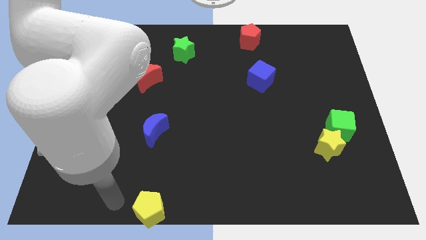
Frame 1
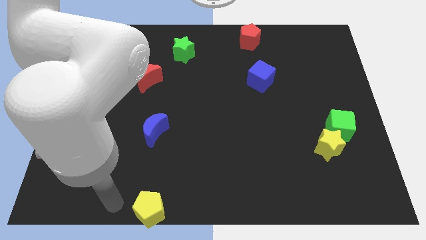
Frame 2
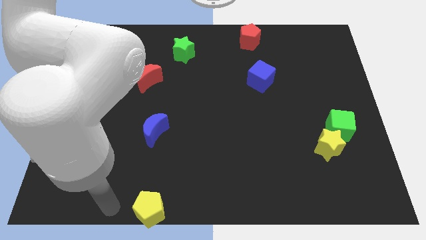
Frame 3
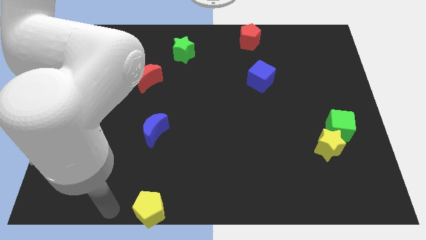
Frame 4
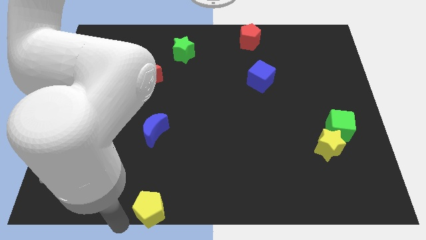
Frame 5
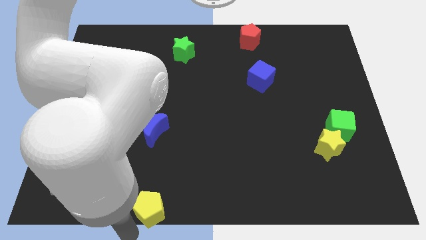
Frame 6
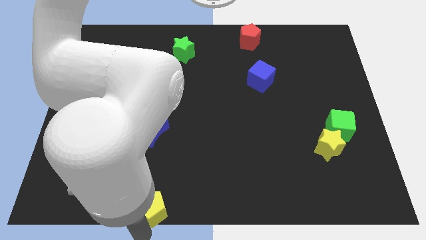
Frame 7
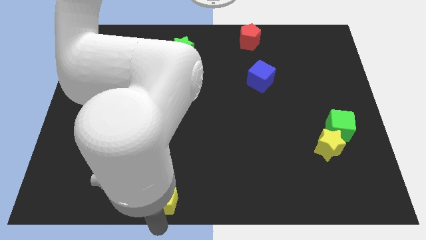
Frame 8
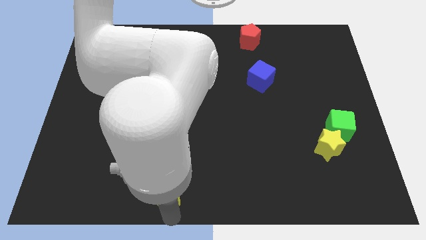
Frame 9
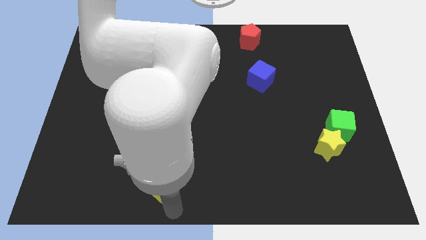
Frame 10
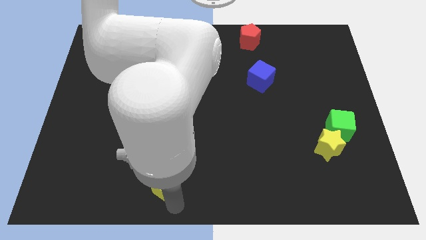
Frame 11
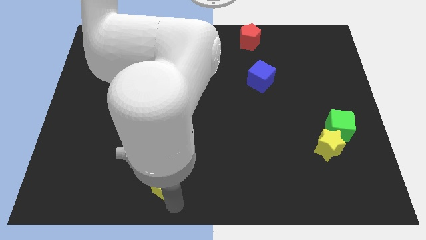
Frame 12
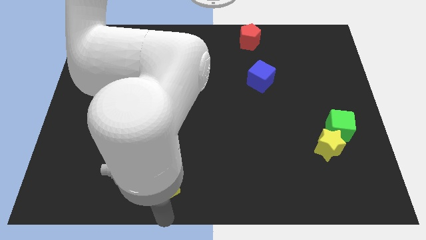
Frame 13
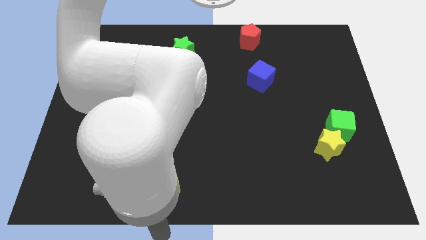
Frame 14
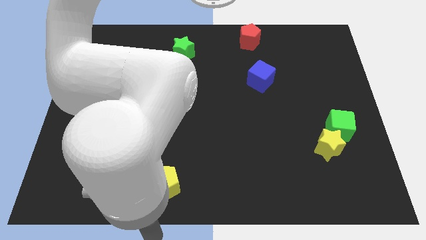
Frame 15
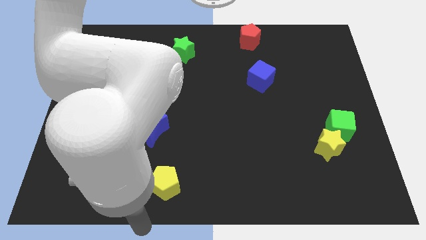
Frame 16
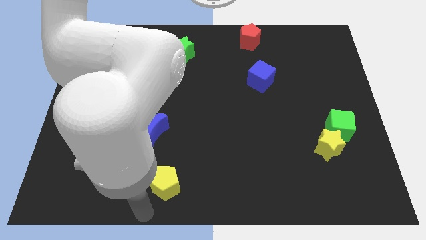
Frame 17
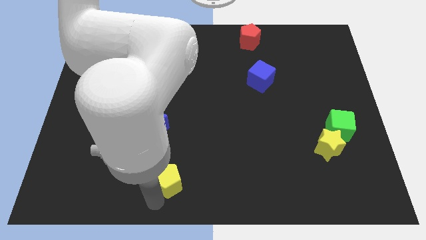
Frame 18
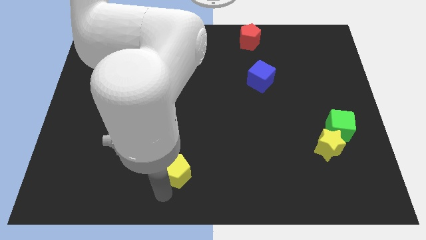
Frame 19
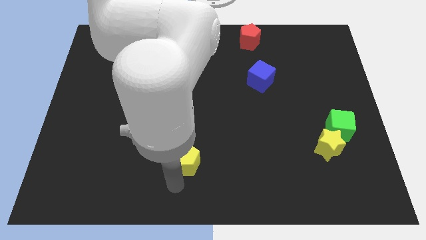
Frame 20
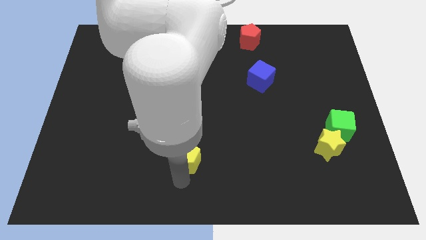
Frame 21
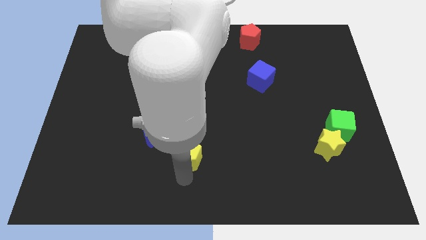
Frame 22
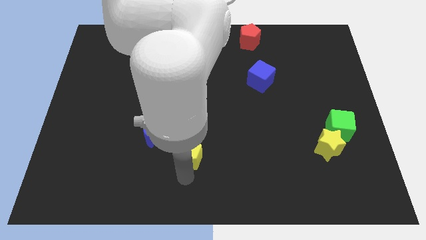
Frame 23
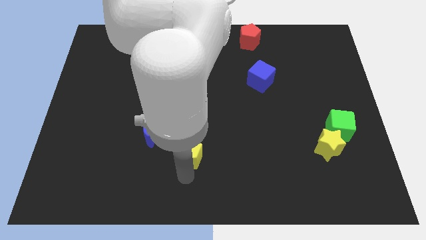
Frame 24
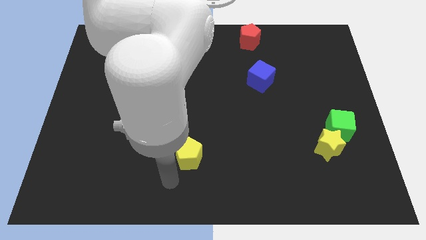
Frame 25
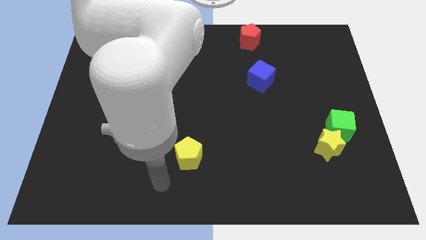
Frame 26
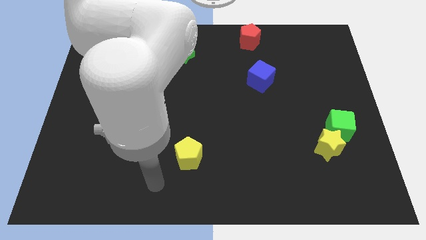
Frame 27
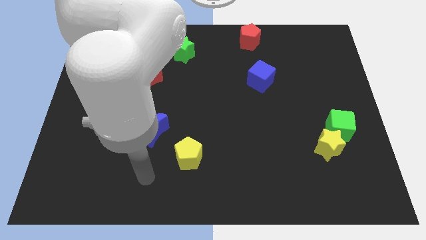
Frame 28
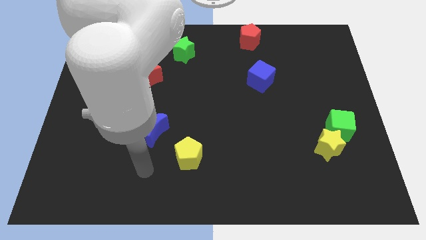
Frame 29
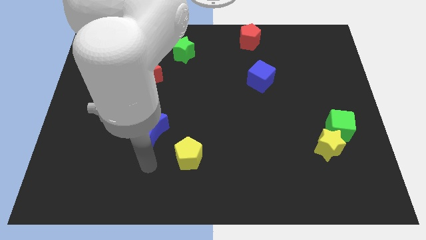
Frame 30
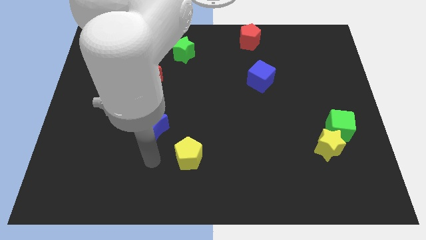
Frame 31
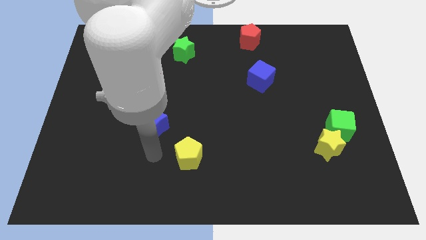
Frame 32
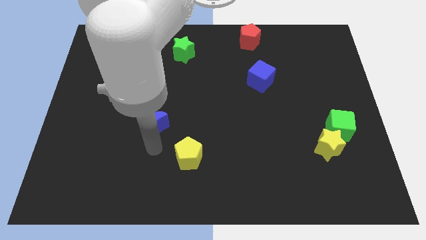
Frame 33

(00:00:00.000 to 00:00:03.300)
push the yellow pentagon diagonally bottom right to the blue moon

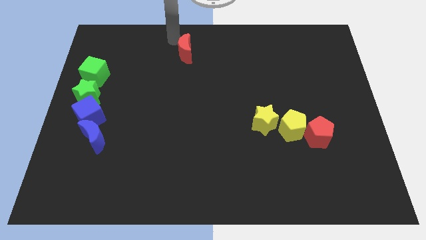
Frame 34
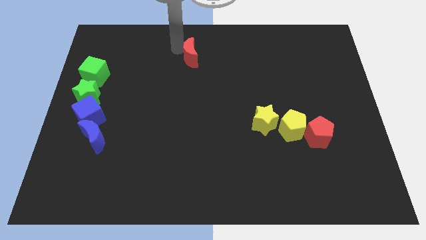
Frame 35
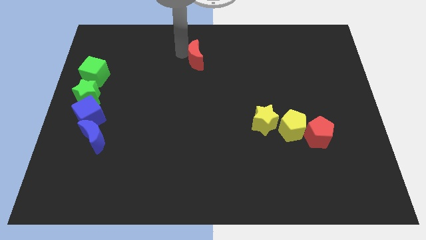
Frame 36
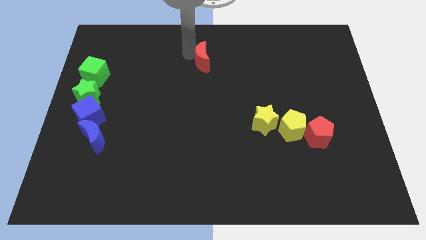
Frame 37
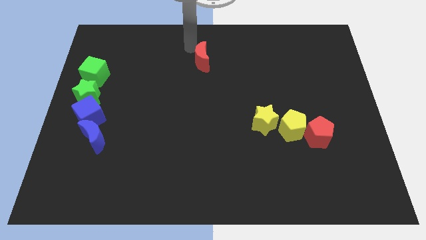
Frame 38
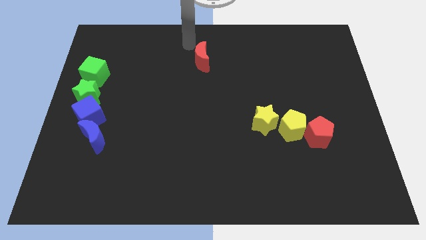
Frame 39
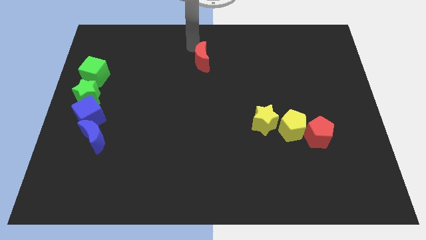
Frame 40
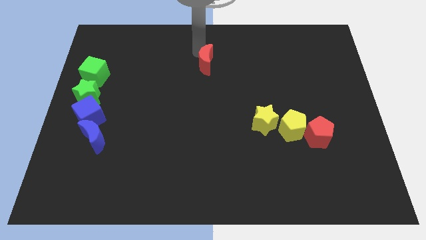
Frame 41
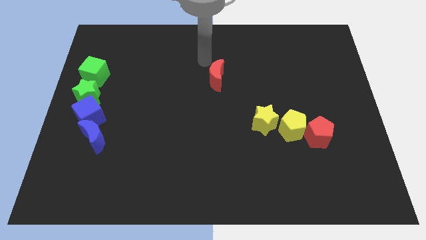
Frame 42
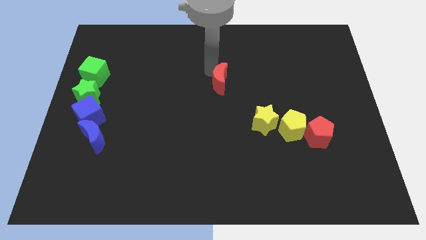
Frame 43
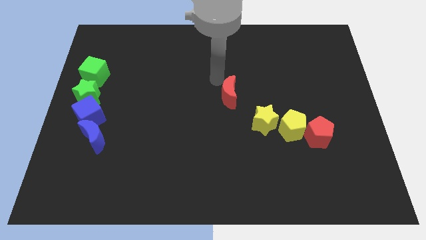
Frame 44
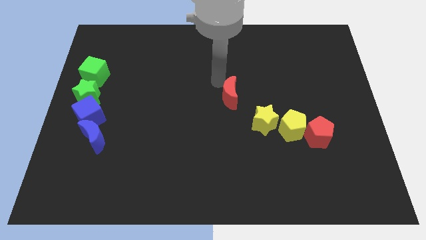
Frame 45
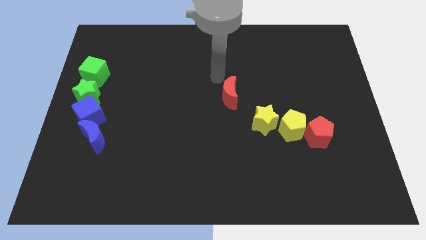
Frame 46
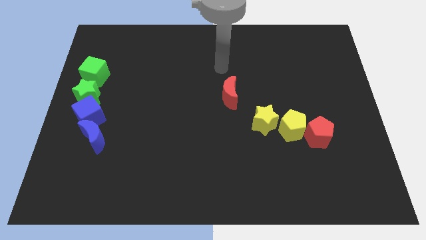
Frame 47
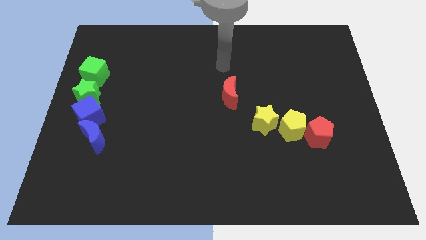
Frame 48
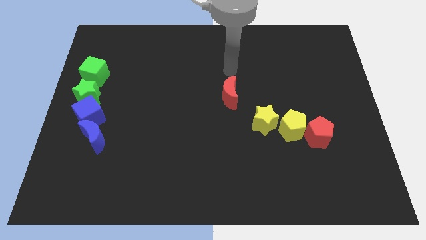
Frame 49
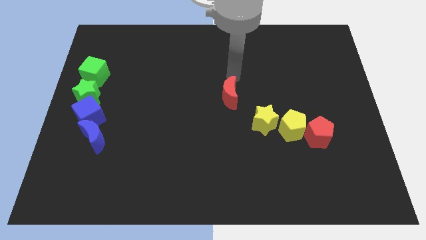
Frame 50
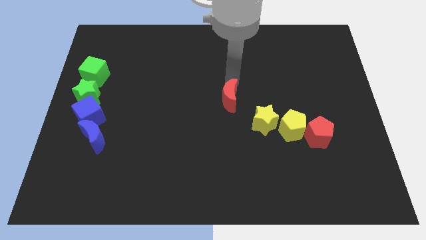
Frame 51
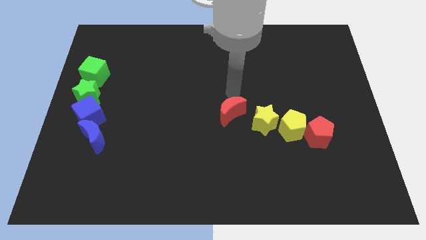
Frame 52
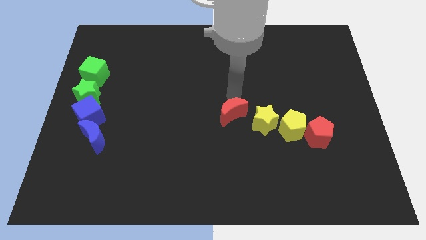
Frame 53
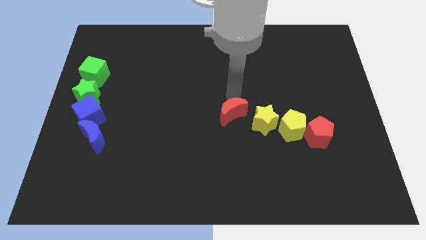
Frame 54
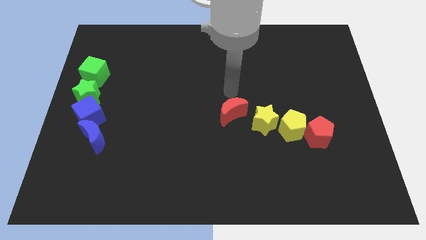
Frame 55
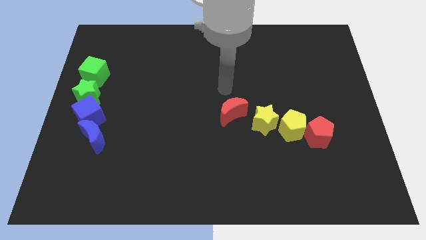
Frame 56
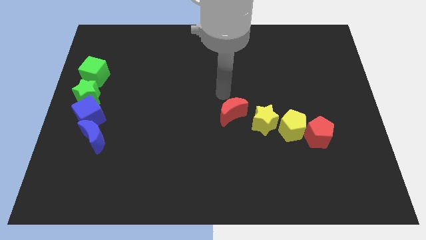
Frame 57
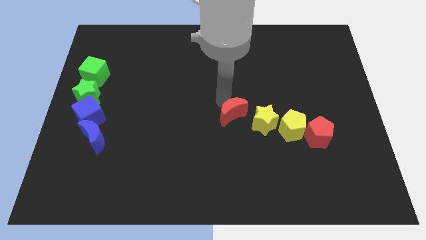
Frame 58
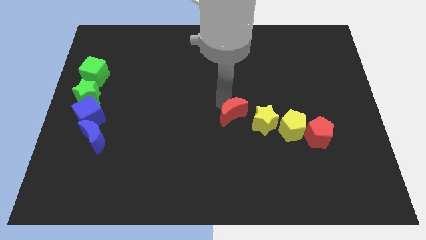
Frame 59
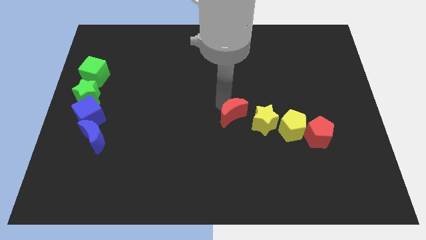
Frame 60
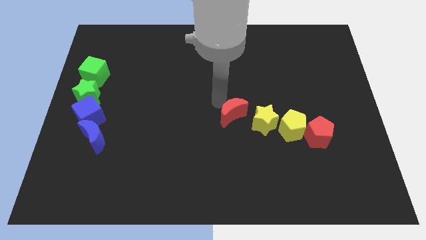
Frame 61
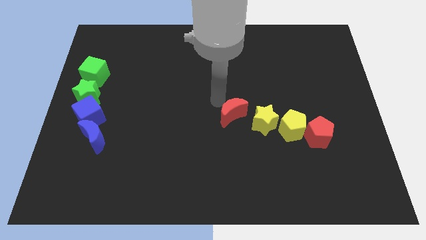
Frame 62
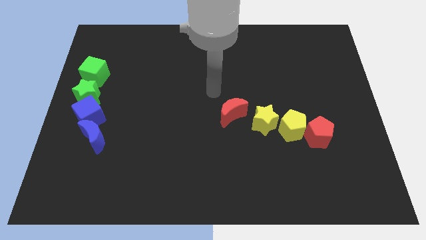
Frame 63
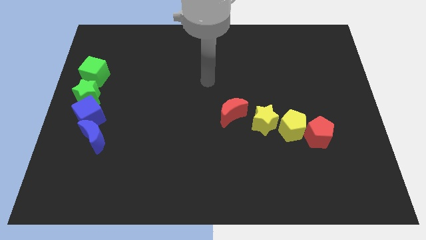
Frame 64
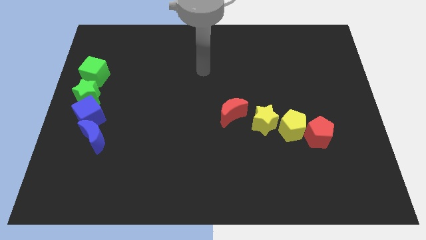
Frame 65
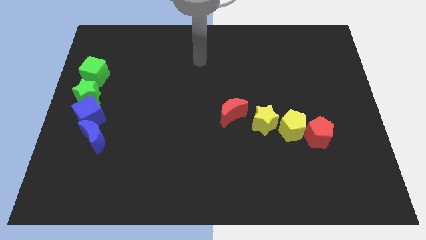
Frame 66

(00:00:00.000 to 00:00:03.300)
place the red moon to the left of the yellow star

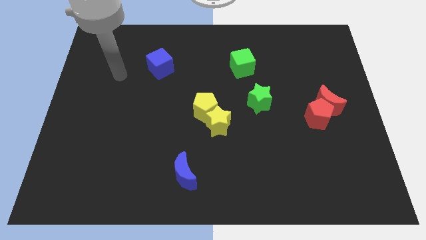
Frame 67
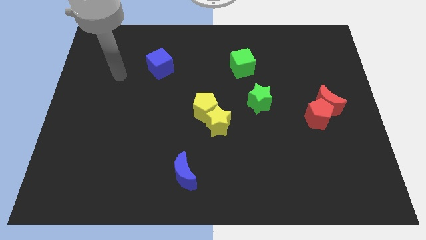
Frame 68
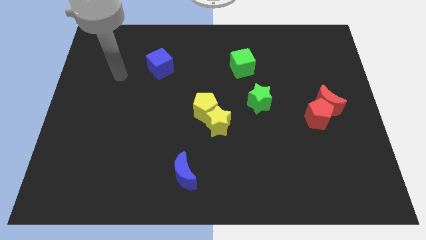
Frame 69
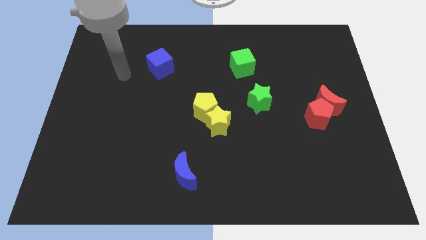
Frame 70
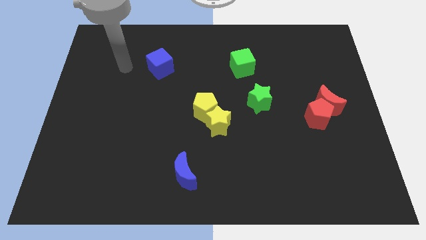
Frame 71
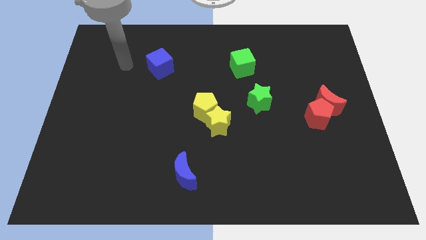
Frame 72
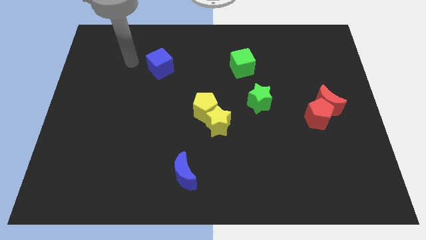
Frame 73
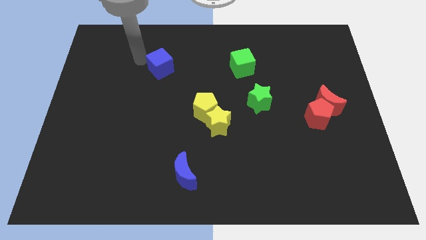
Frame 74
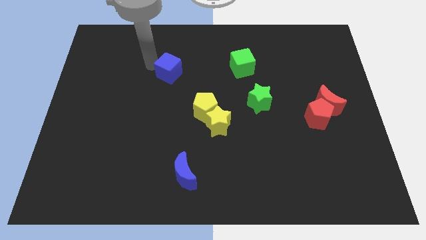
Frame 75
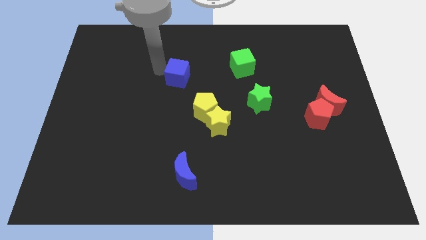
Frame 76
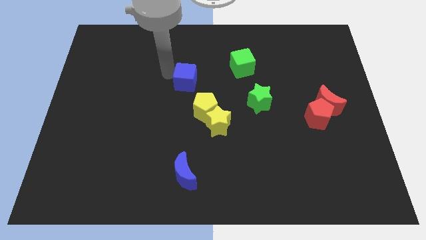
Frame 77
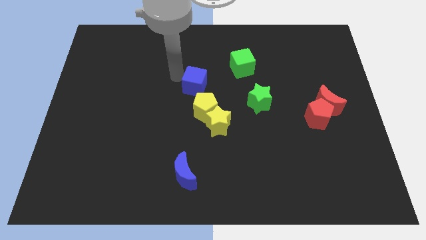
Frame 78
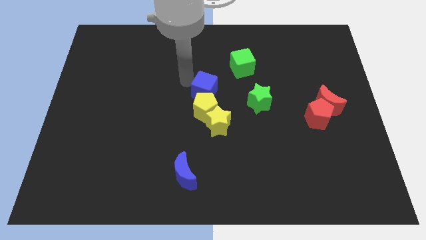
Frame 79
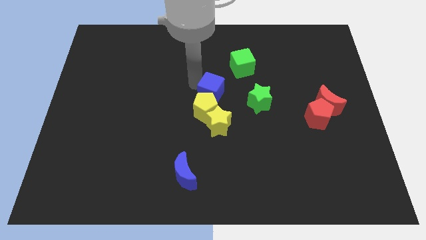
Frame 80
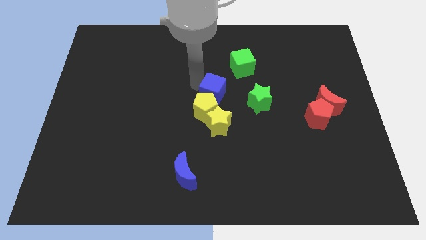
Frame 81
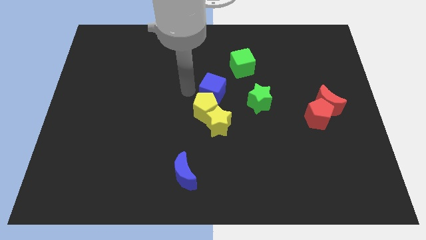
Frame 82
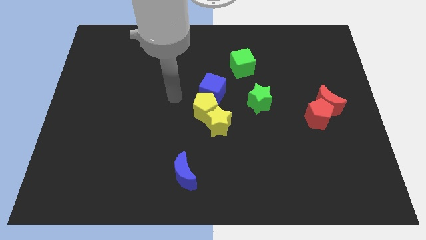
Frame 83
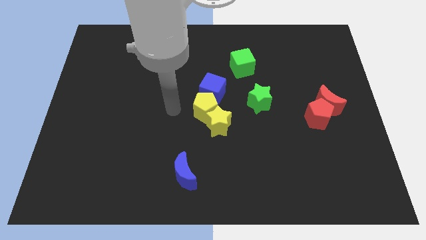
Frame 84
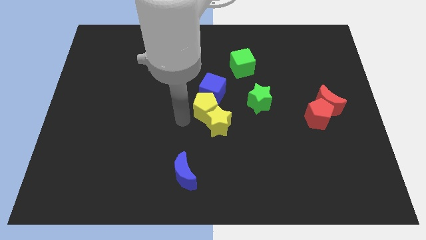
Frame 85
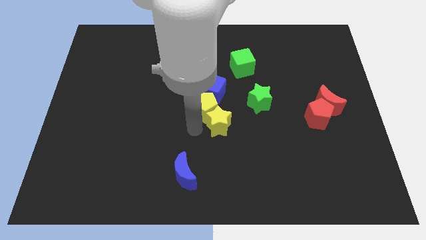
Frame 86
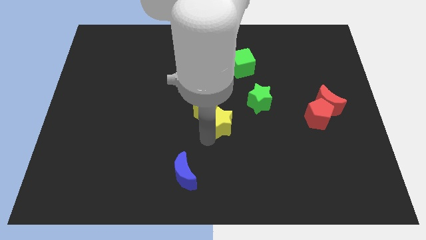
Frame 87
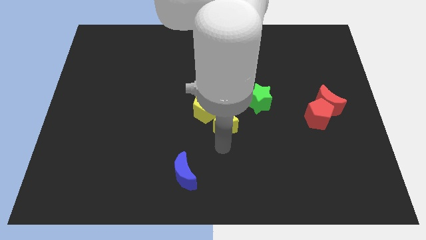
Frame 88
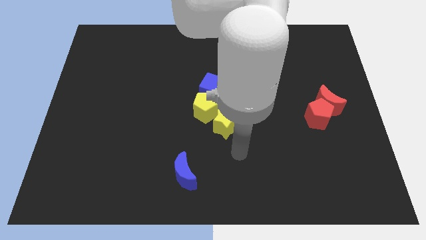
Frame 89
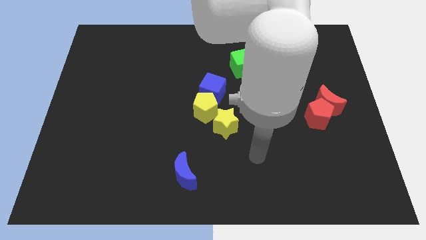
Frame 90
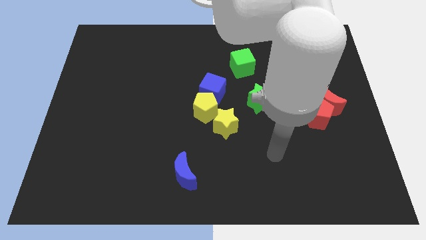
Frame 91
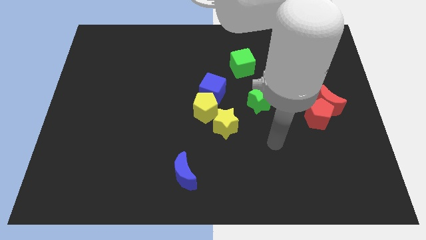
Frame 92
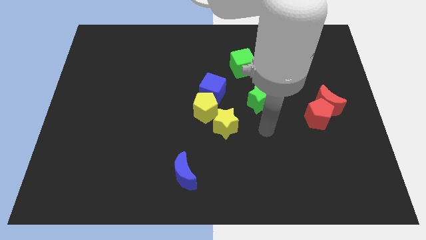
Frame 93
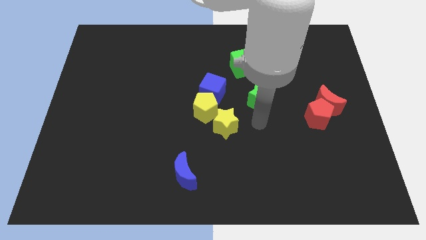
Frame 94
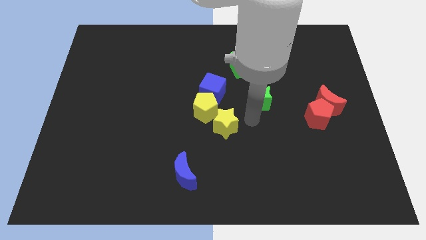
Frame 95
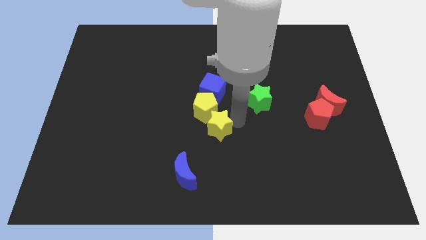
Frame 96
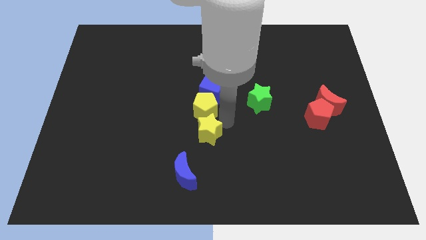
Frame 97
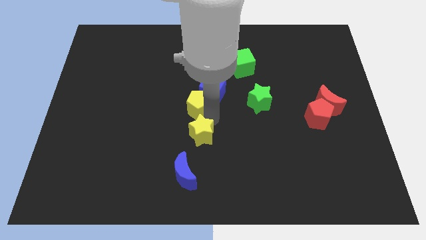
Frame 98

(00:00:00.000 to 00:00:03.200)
place blue cube above yellow pentagon
